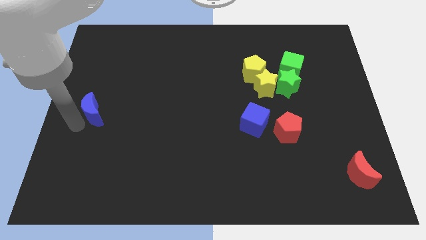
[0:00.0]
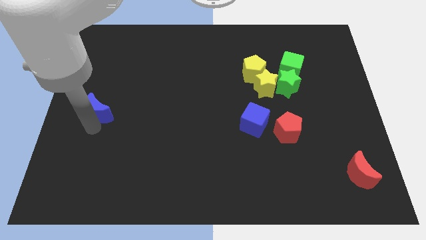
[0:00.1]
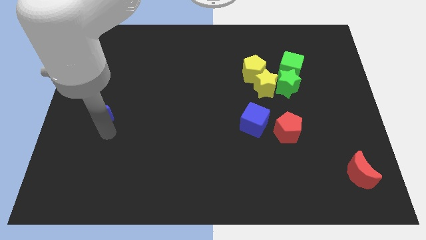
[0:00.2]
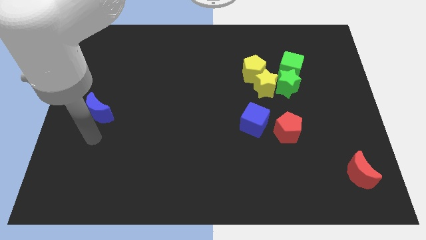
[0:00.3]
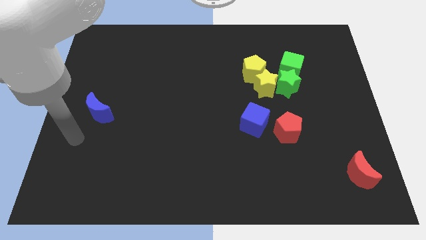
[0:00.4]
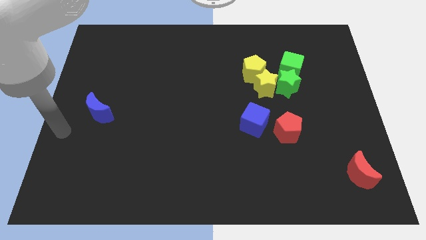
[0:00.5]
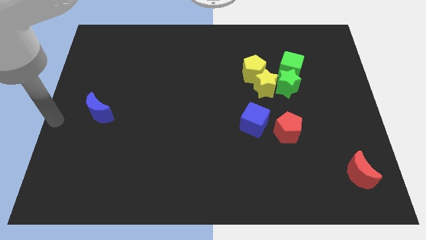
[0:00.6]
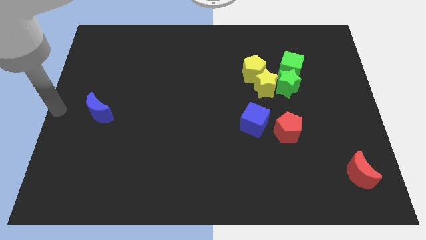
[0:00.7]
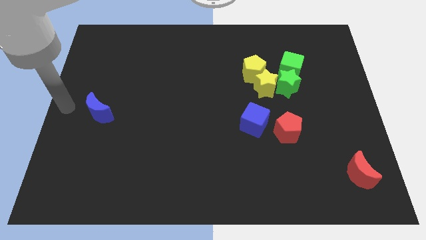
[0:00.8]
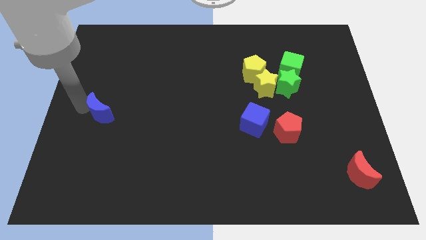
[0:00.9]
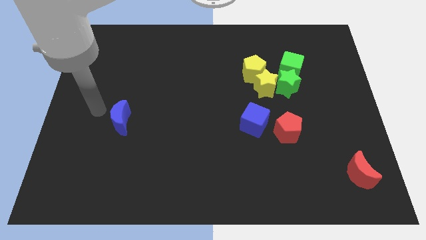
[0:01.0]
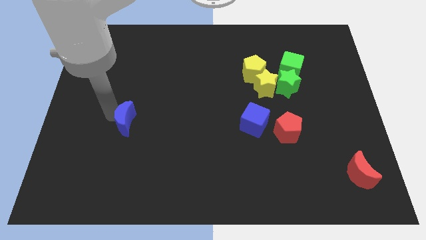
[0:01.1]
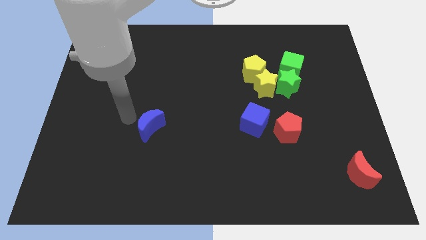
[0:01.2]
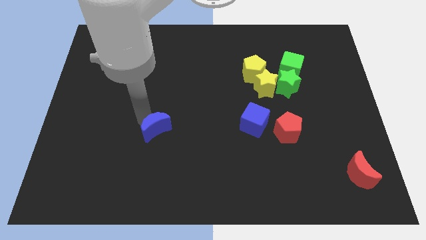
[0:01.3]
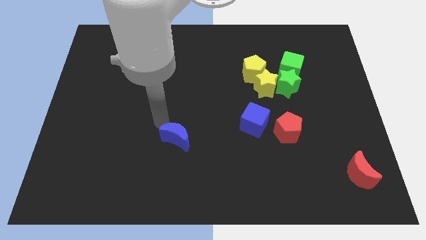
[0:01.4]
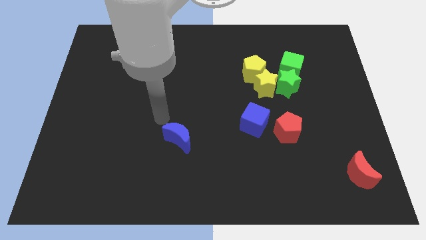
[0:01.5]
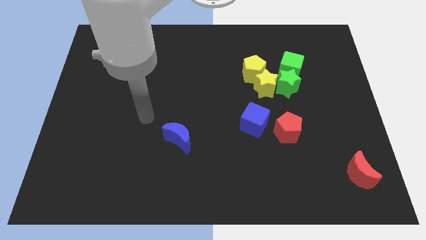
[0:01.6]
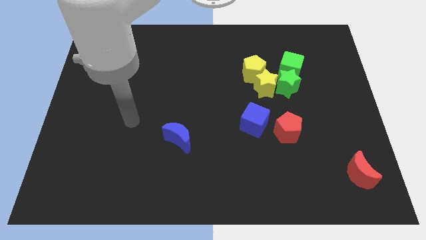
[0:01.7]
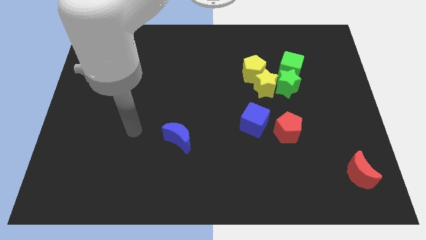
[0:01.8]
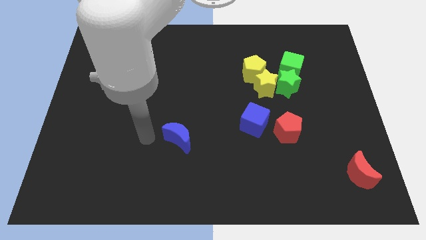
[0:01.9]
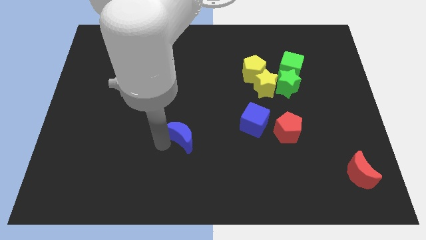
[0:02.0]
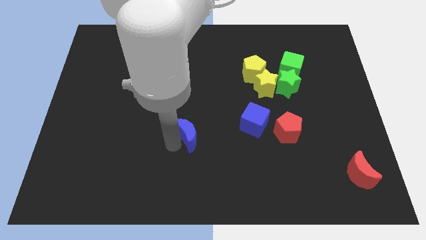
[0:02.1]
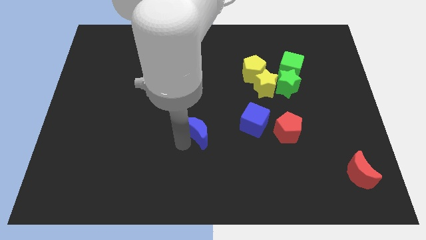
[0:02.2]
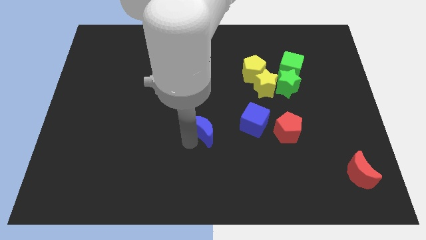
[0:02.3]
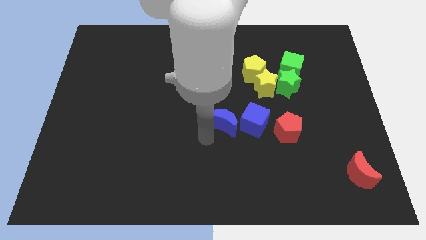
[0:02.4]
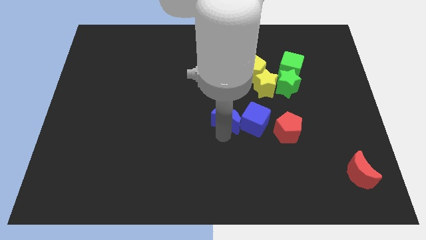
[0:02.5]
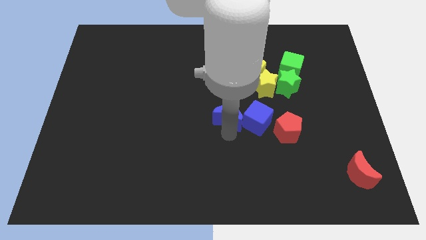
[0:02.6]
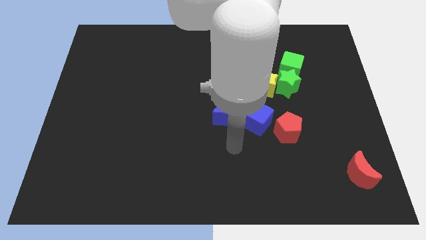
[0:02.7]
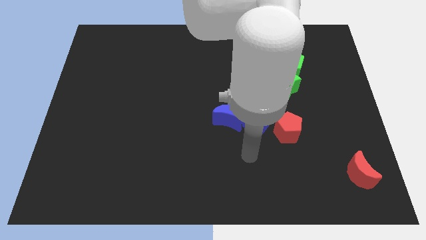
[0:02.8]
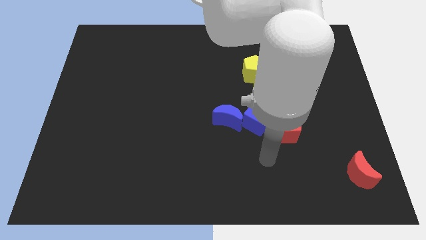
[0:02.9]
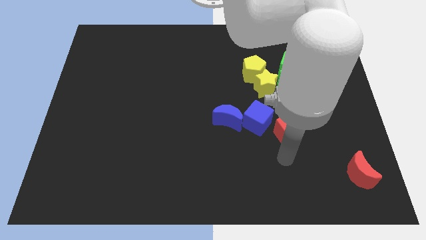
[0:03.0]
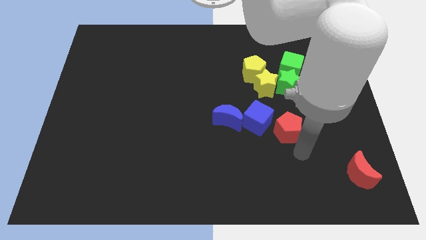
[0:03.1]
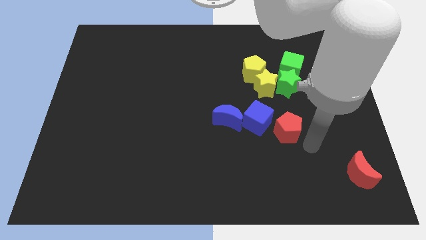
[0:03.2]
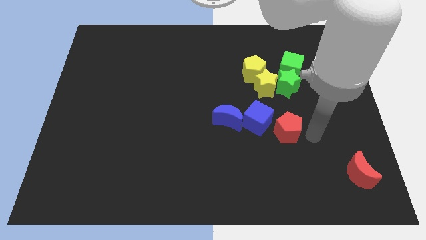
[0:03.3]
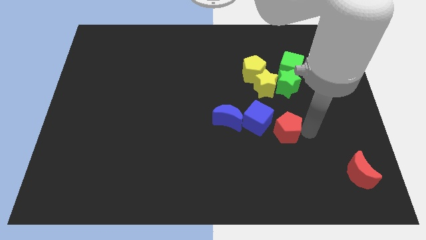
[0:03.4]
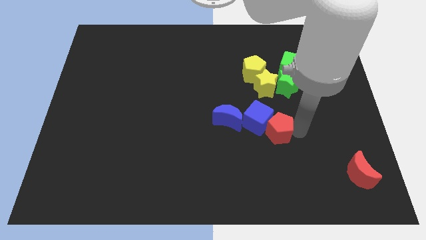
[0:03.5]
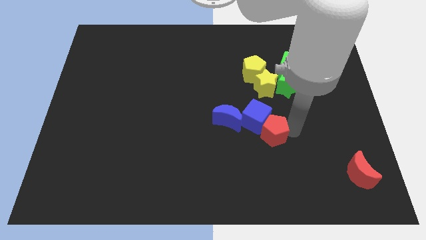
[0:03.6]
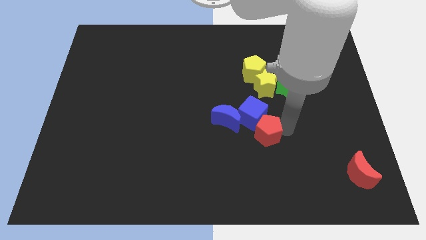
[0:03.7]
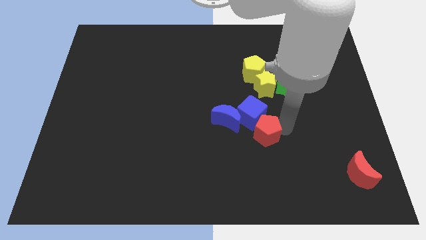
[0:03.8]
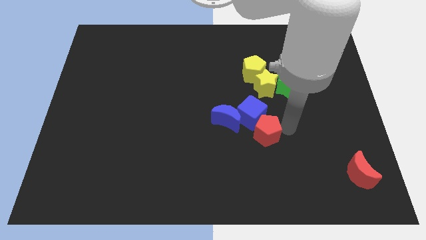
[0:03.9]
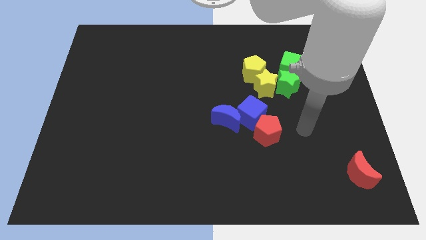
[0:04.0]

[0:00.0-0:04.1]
push the blue moon and the red pentagon into the blue cube

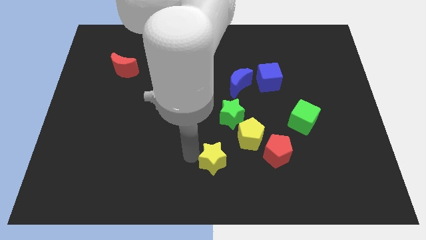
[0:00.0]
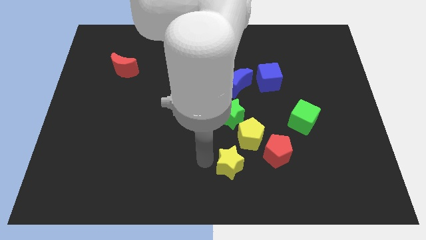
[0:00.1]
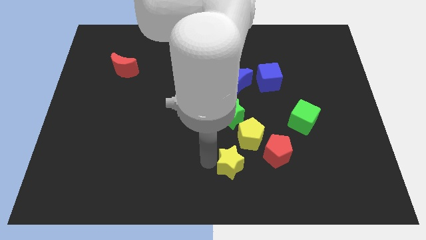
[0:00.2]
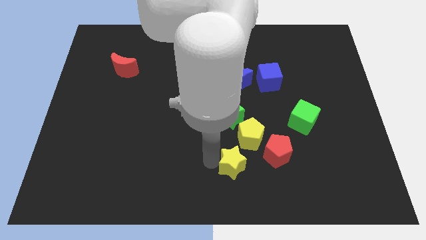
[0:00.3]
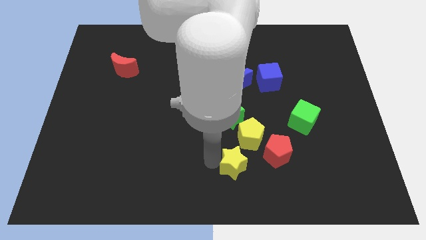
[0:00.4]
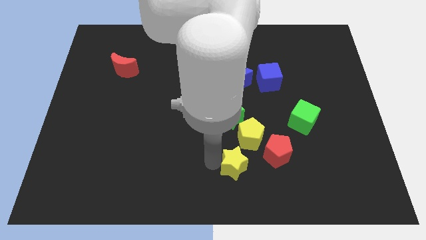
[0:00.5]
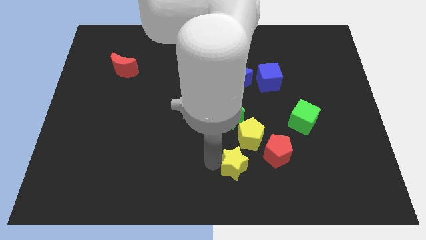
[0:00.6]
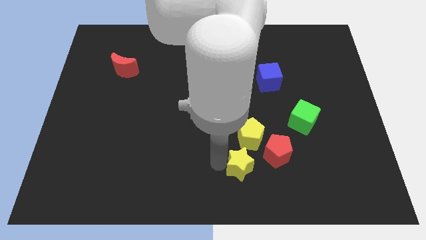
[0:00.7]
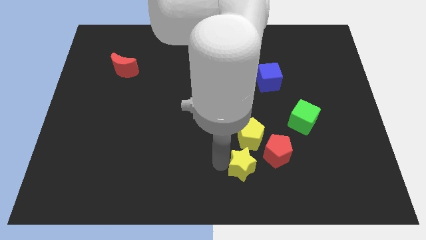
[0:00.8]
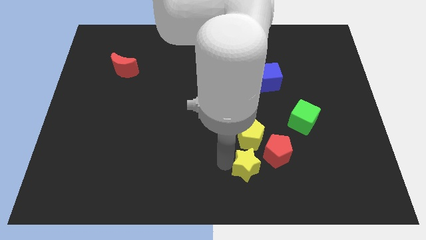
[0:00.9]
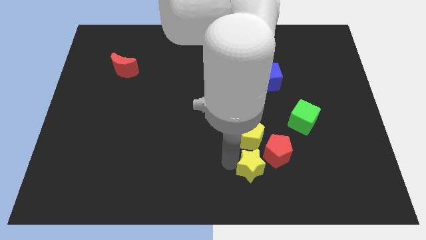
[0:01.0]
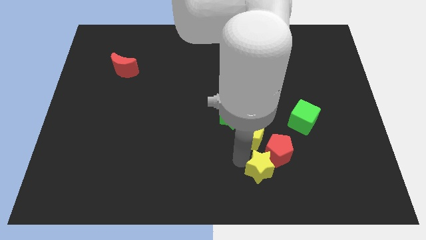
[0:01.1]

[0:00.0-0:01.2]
place the yellow star below the yellow pentagon

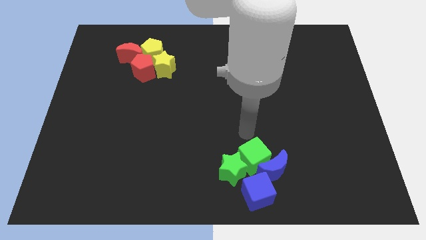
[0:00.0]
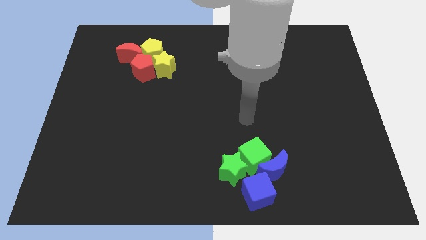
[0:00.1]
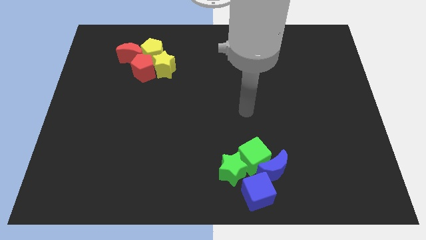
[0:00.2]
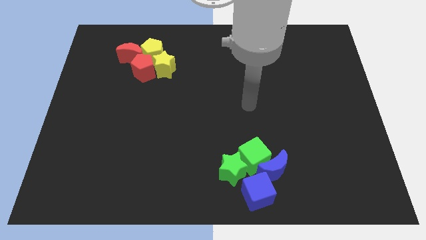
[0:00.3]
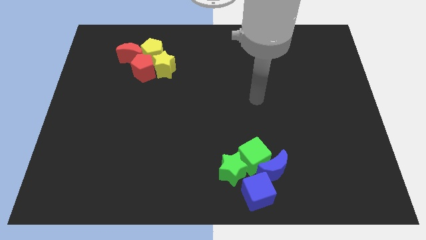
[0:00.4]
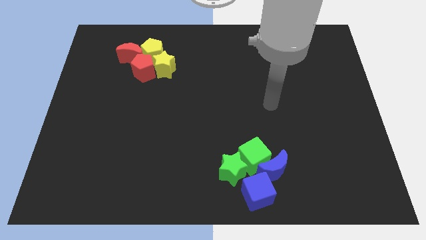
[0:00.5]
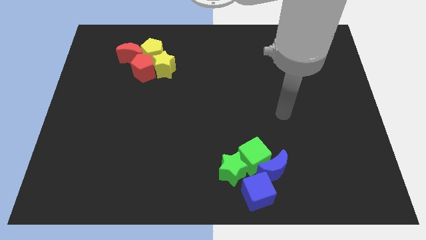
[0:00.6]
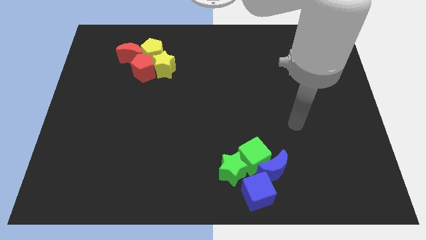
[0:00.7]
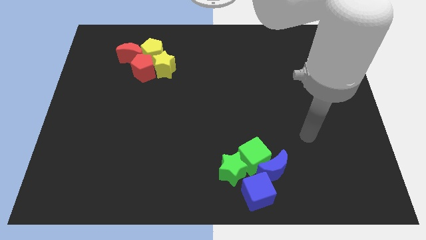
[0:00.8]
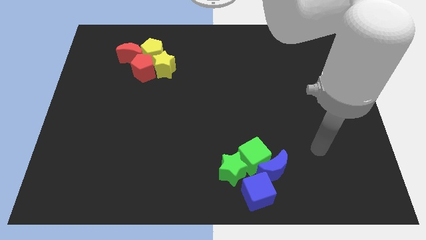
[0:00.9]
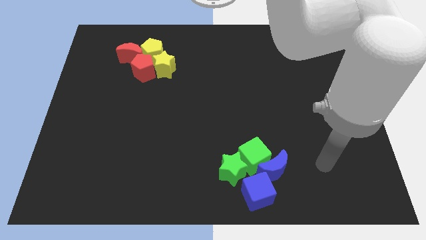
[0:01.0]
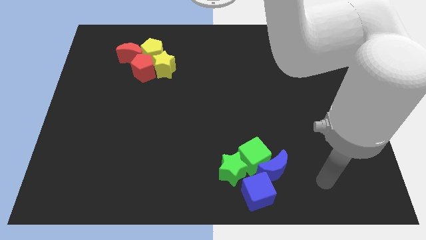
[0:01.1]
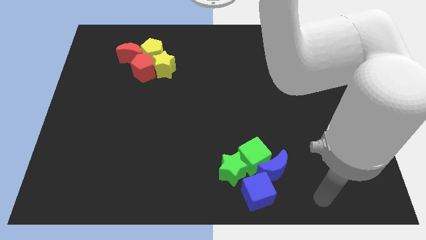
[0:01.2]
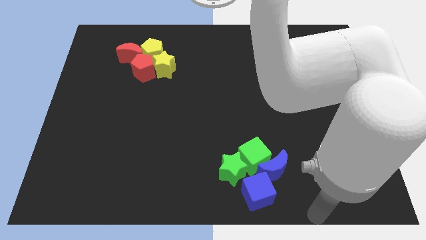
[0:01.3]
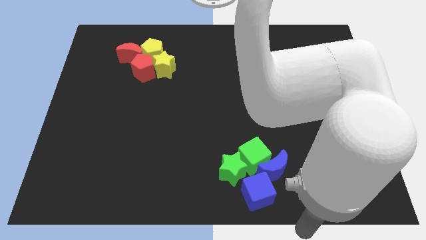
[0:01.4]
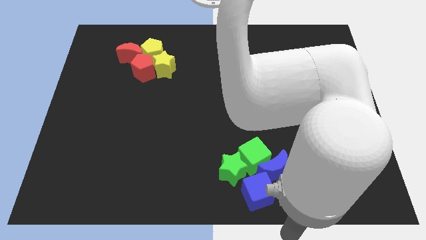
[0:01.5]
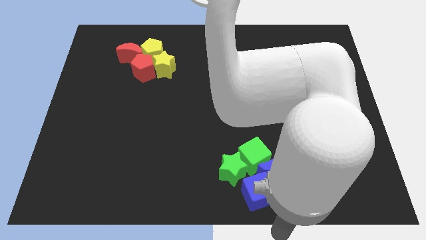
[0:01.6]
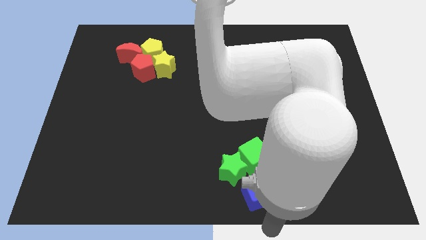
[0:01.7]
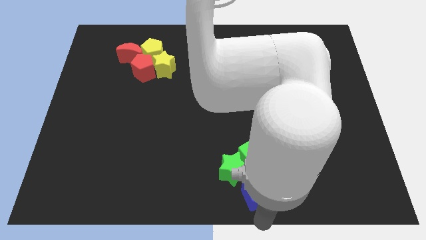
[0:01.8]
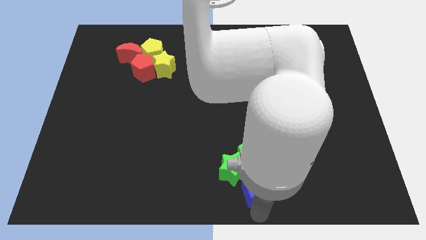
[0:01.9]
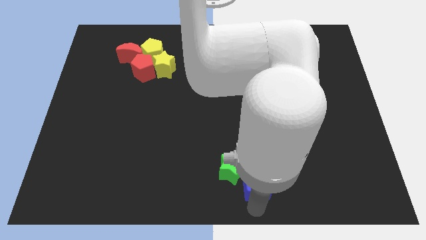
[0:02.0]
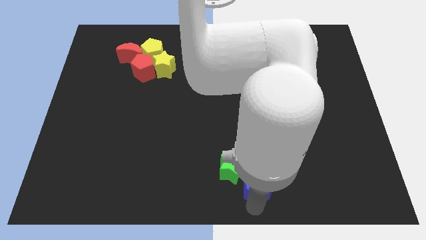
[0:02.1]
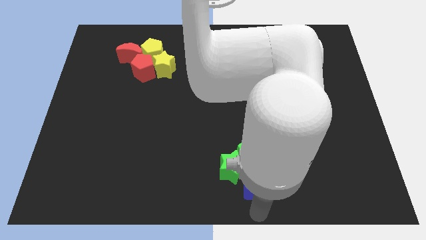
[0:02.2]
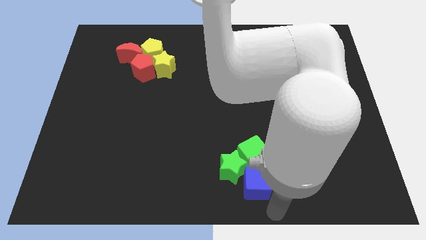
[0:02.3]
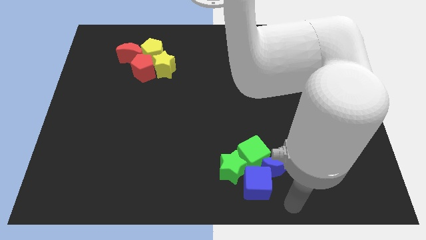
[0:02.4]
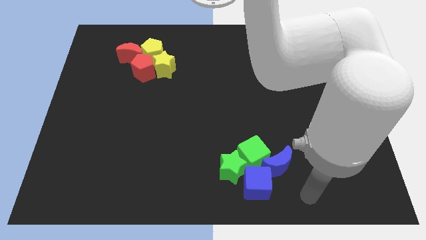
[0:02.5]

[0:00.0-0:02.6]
point your arm at the right of the blue cube

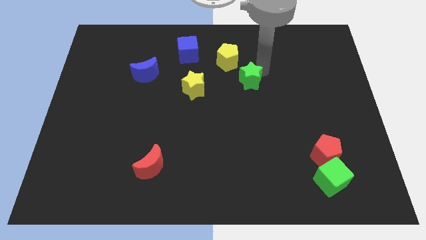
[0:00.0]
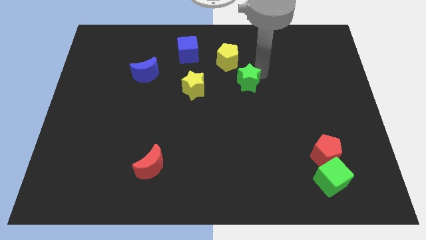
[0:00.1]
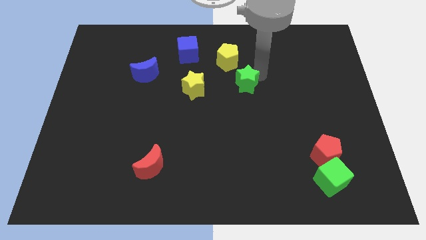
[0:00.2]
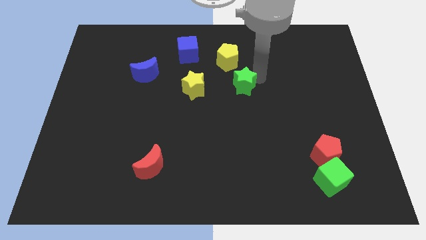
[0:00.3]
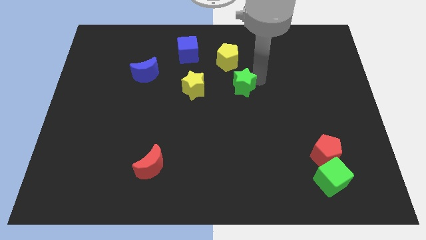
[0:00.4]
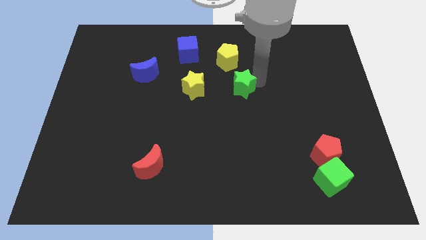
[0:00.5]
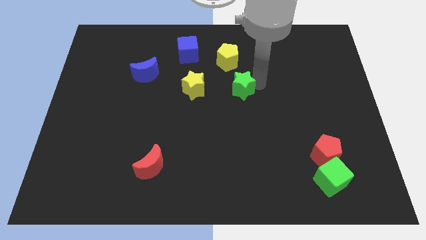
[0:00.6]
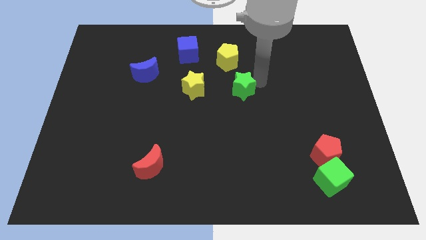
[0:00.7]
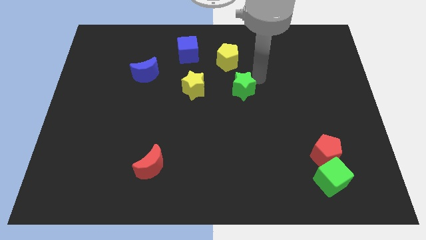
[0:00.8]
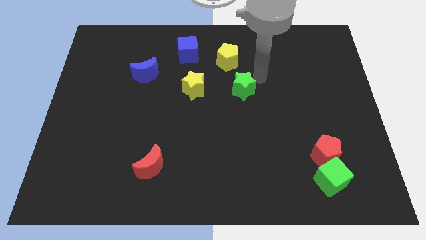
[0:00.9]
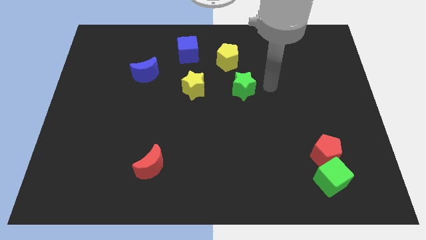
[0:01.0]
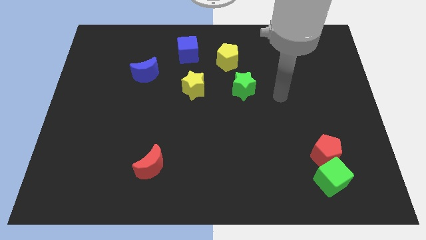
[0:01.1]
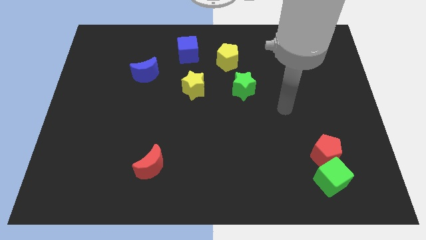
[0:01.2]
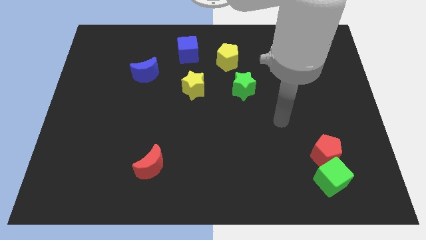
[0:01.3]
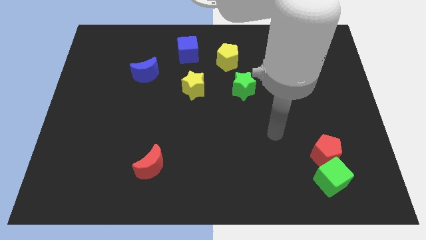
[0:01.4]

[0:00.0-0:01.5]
move the green star right to the yellow star
